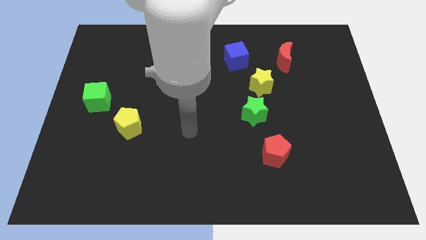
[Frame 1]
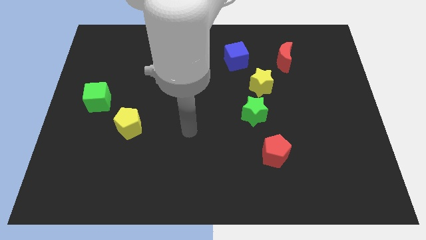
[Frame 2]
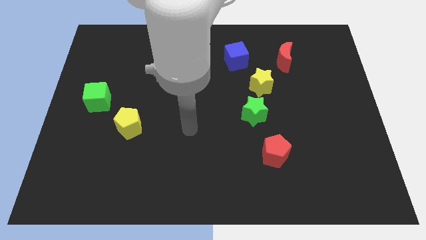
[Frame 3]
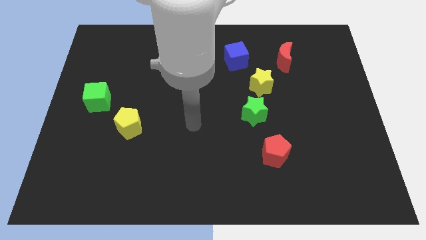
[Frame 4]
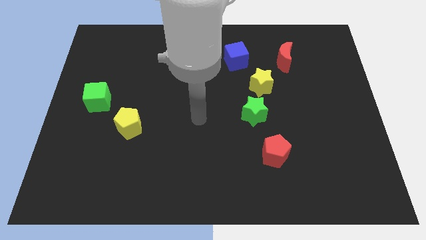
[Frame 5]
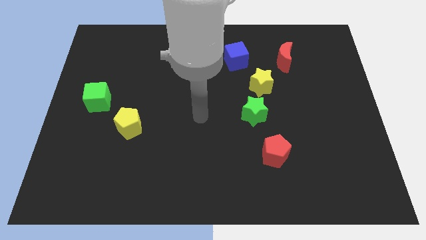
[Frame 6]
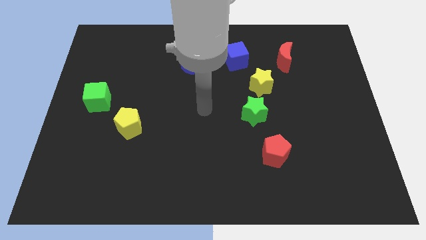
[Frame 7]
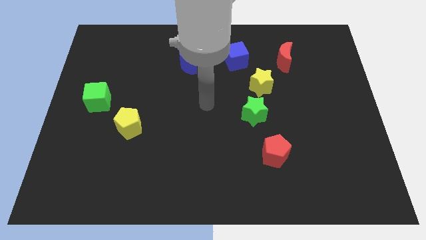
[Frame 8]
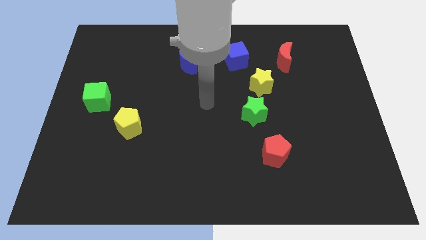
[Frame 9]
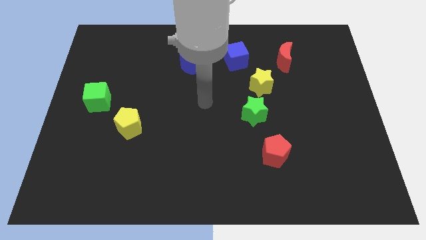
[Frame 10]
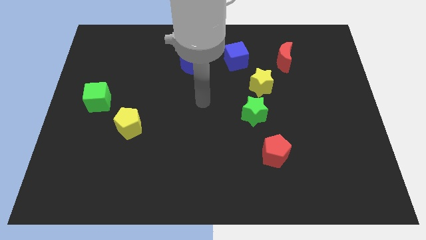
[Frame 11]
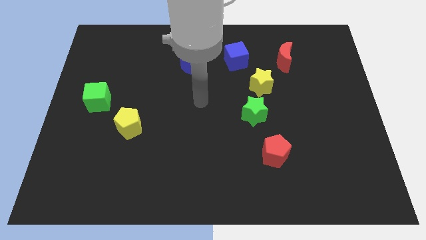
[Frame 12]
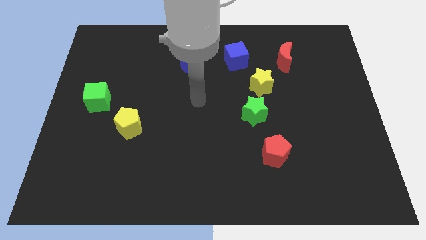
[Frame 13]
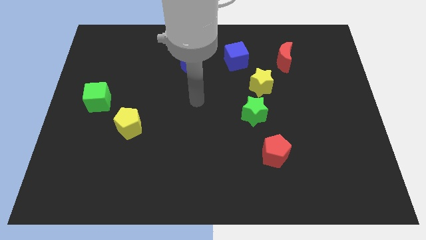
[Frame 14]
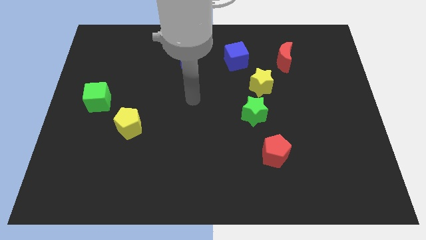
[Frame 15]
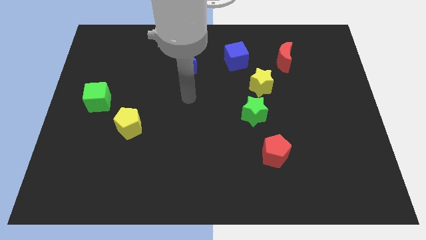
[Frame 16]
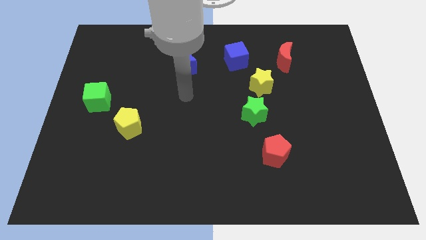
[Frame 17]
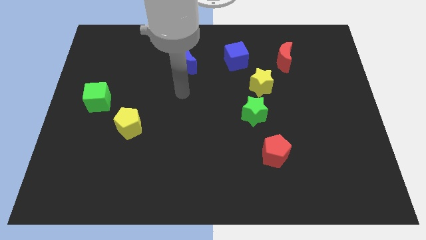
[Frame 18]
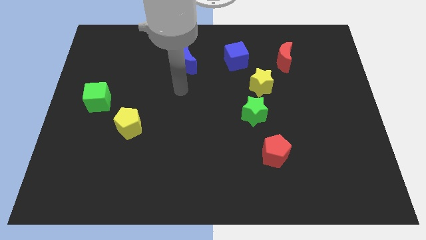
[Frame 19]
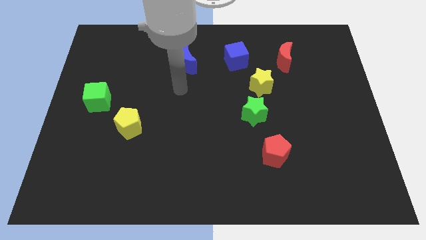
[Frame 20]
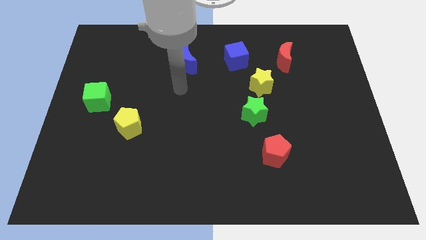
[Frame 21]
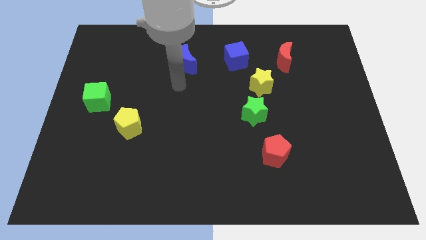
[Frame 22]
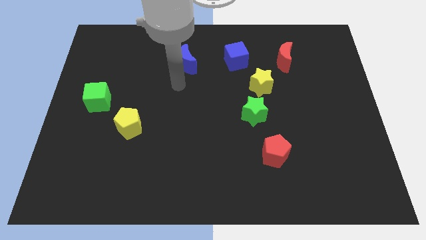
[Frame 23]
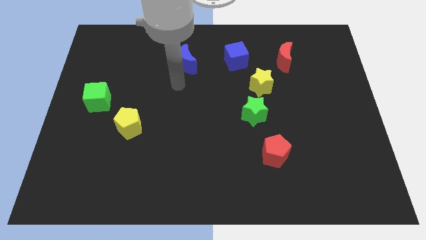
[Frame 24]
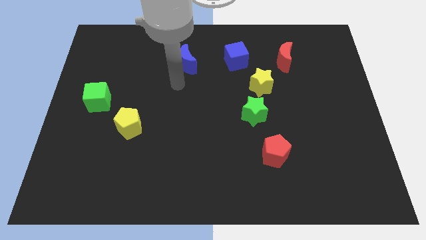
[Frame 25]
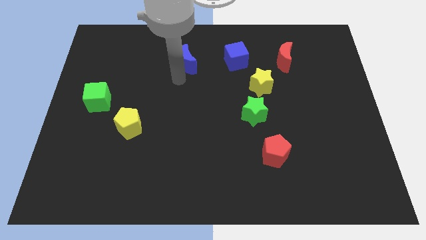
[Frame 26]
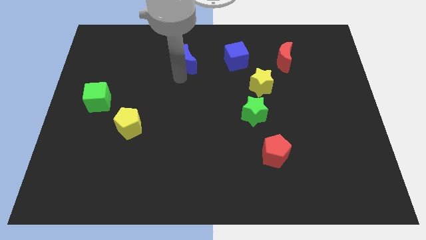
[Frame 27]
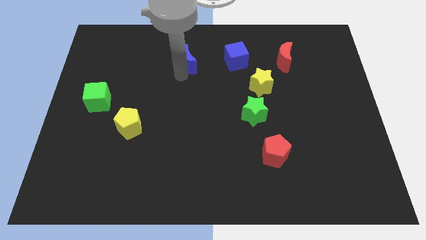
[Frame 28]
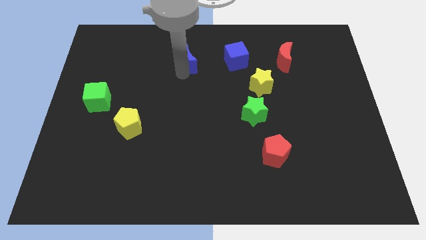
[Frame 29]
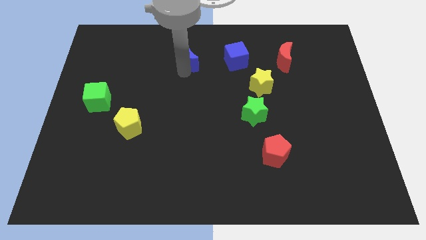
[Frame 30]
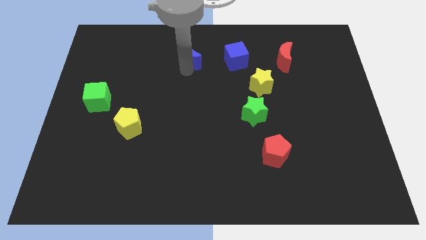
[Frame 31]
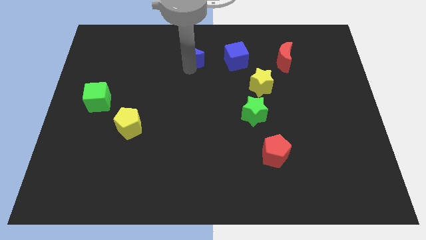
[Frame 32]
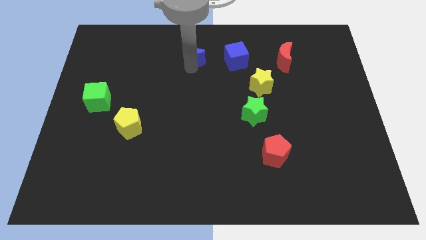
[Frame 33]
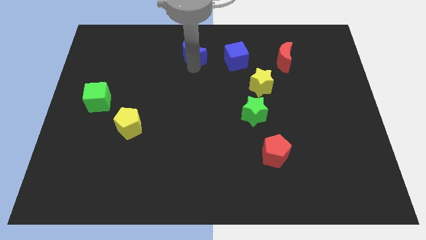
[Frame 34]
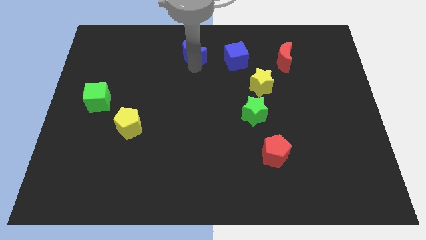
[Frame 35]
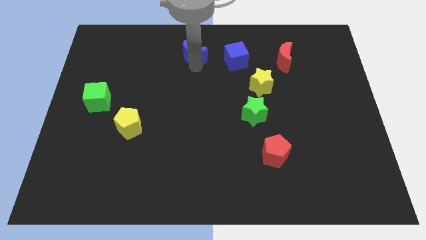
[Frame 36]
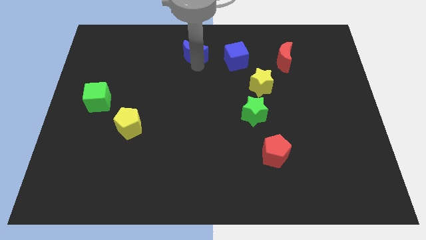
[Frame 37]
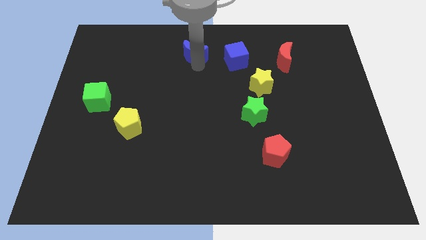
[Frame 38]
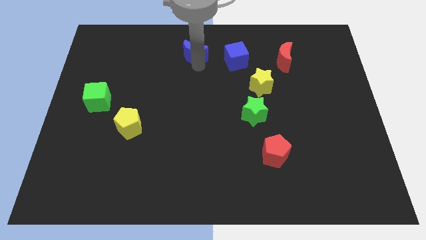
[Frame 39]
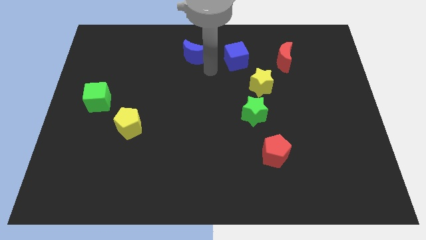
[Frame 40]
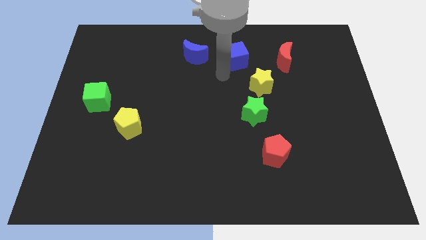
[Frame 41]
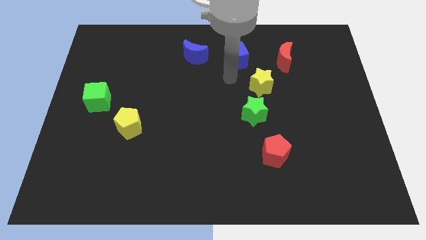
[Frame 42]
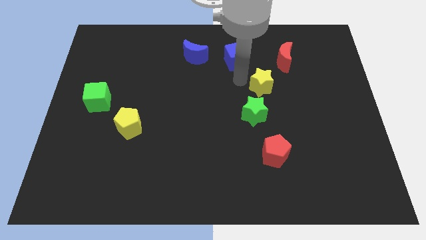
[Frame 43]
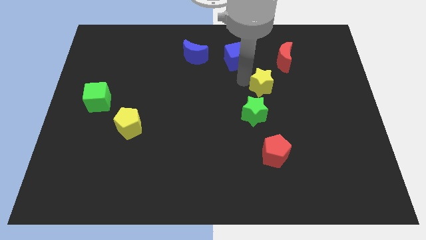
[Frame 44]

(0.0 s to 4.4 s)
push the blue crescent slightly to the top of the board

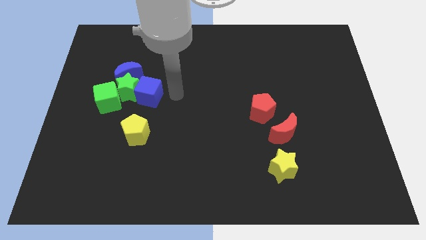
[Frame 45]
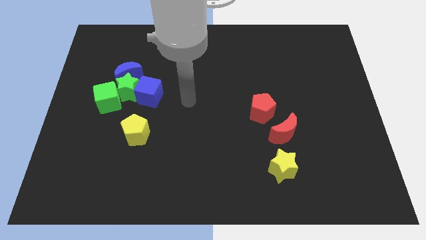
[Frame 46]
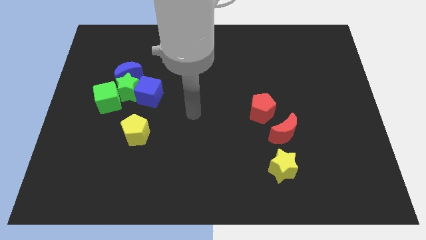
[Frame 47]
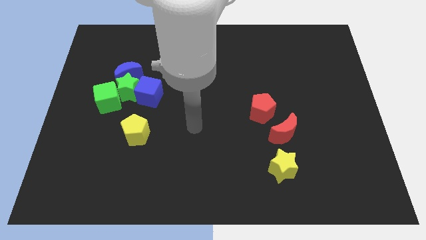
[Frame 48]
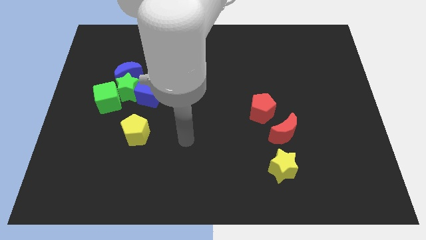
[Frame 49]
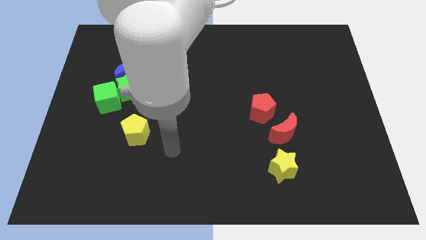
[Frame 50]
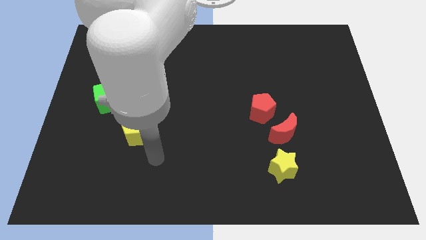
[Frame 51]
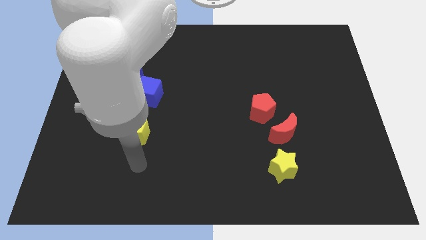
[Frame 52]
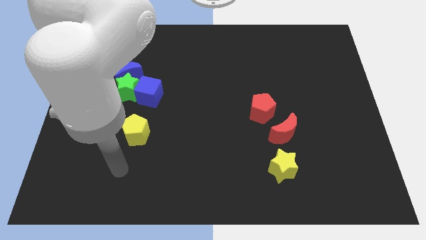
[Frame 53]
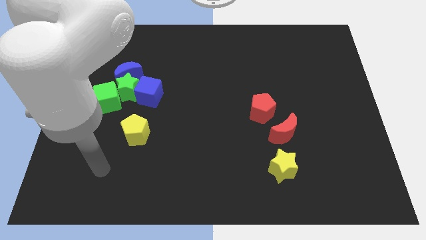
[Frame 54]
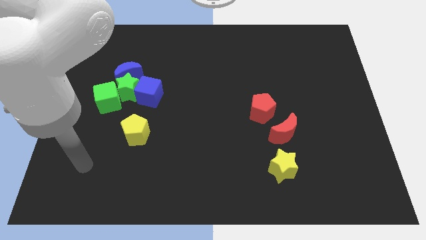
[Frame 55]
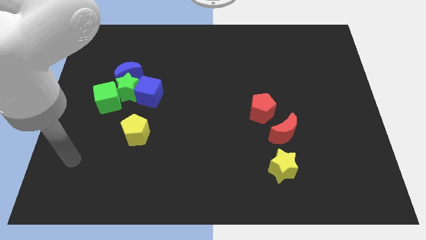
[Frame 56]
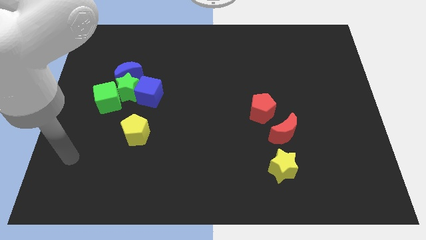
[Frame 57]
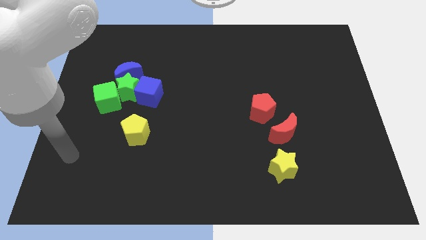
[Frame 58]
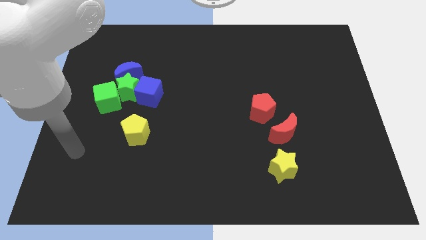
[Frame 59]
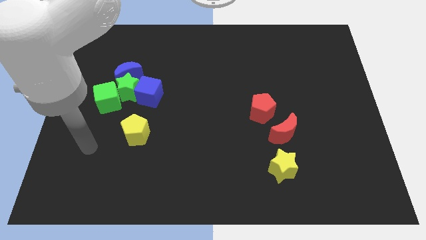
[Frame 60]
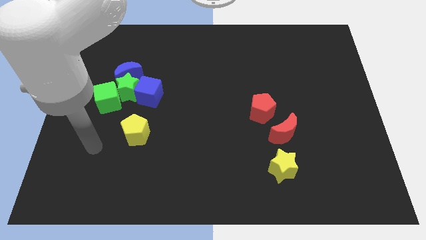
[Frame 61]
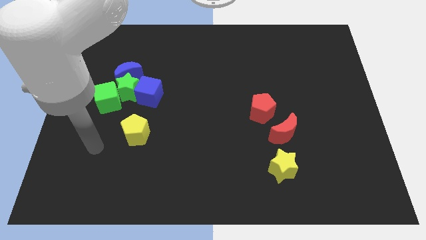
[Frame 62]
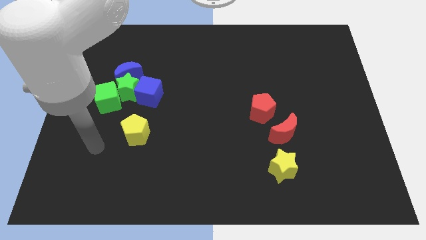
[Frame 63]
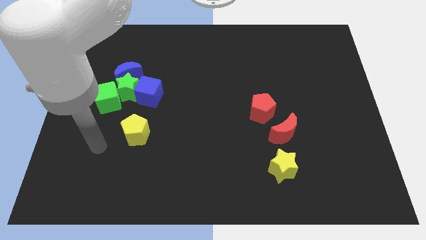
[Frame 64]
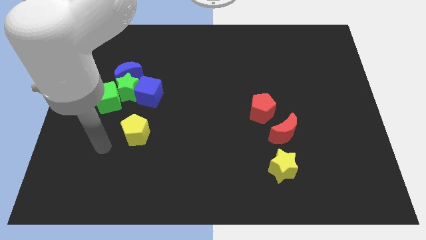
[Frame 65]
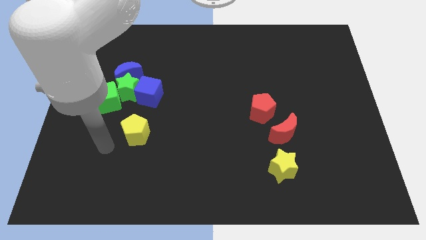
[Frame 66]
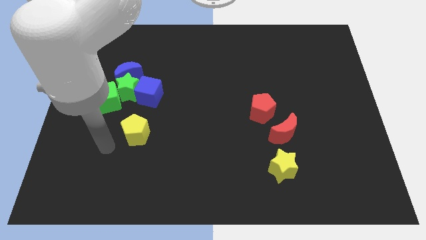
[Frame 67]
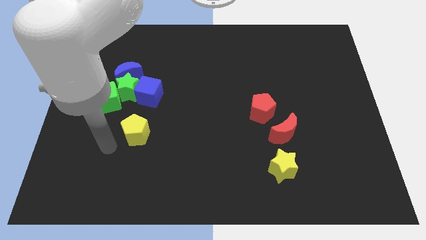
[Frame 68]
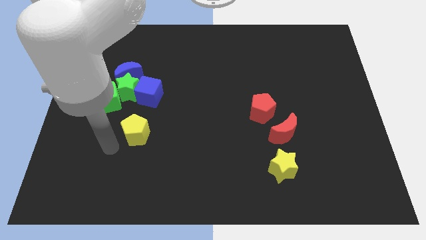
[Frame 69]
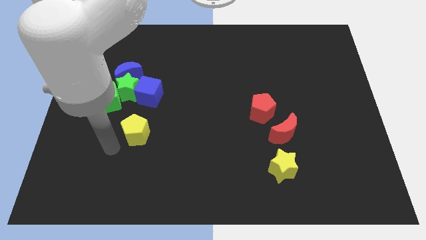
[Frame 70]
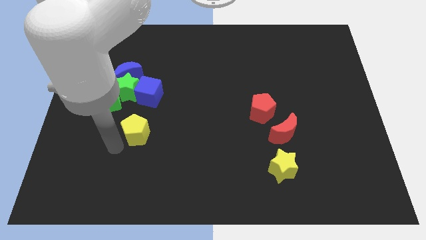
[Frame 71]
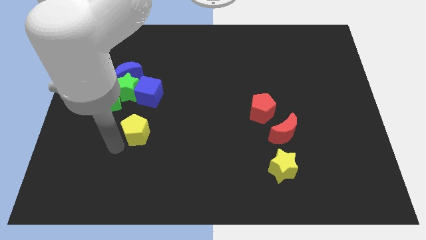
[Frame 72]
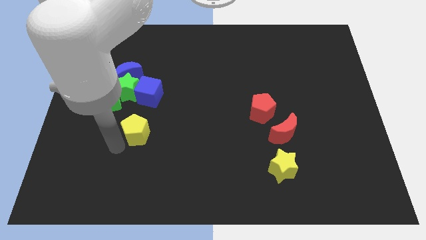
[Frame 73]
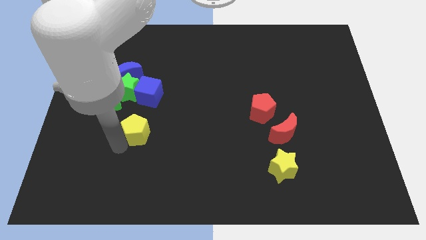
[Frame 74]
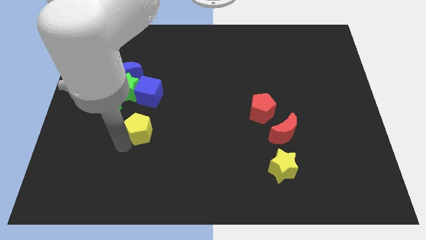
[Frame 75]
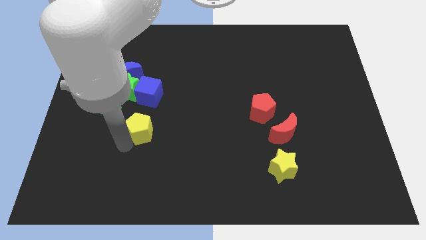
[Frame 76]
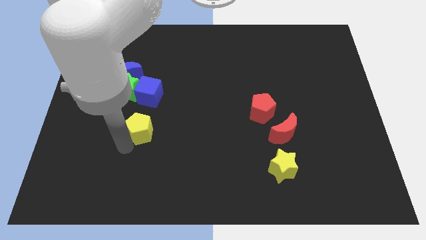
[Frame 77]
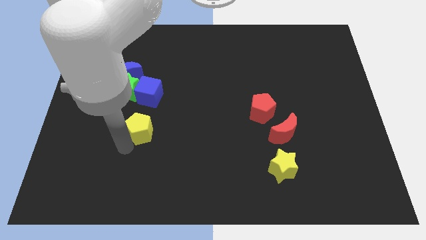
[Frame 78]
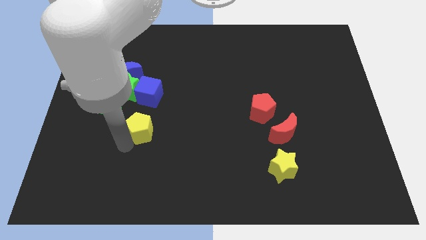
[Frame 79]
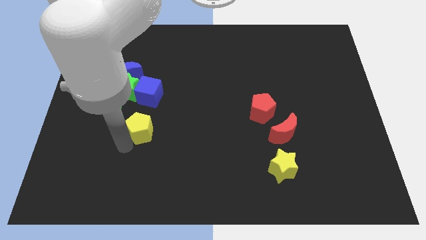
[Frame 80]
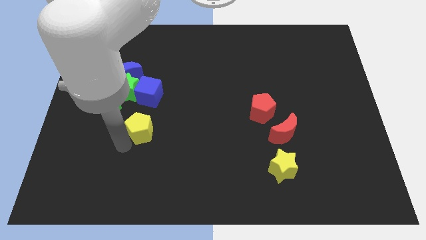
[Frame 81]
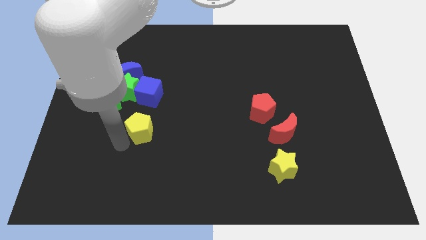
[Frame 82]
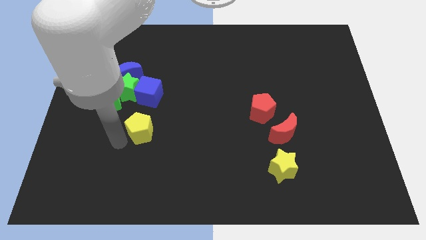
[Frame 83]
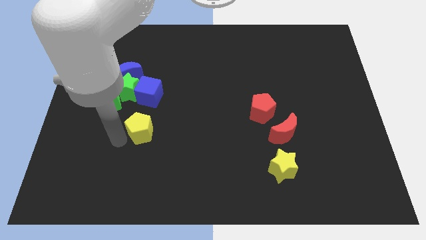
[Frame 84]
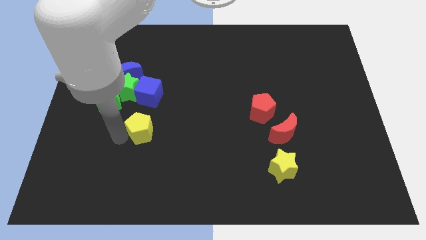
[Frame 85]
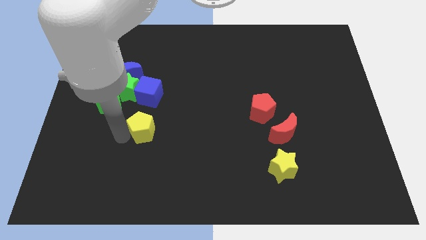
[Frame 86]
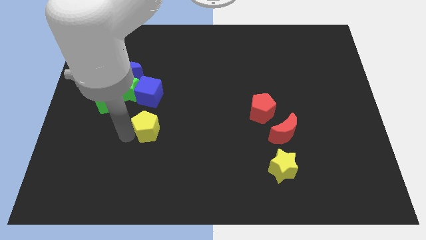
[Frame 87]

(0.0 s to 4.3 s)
slightly push the yellow pentagon to the right of the board

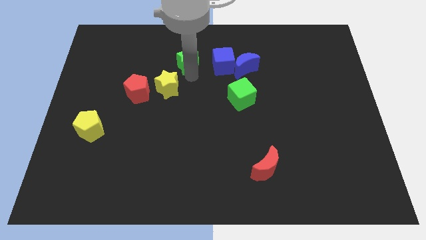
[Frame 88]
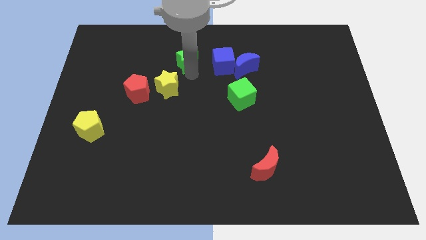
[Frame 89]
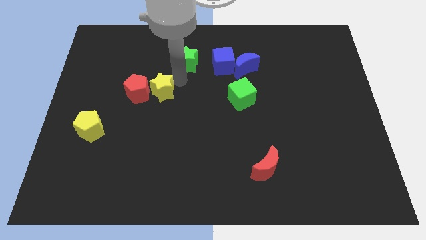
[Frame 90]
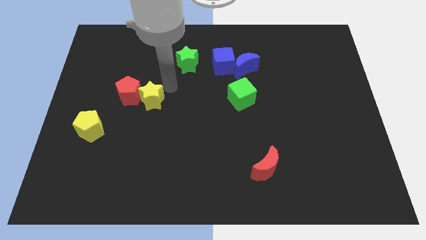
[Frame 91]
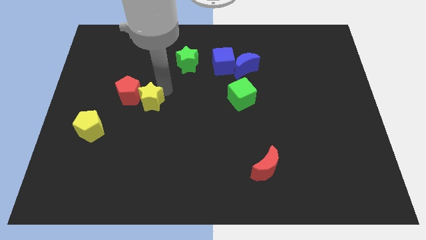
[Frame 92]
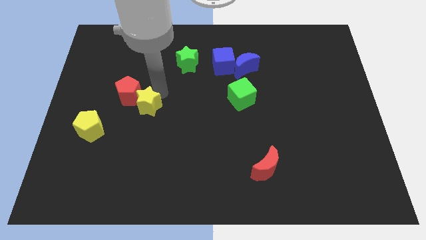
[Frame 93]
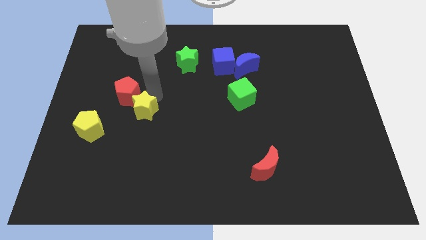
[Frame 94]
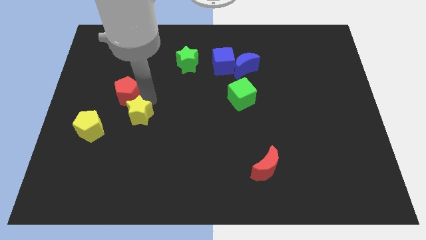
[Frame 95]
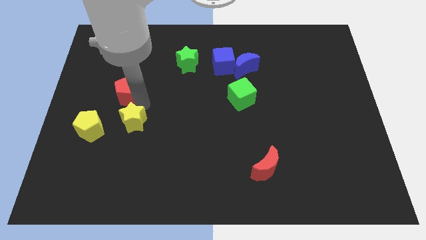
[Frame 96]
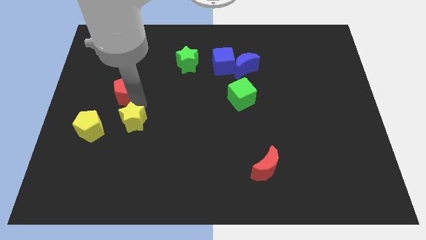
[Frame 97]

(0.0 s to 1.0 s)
place yellow star below red pentagon
